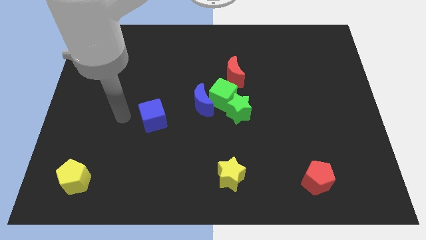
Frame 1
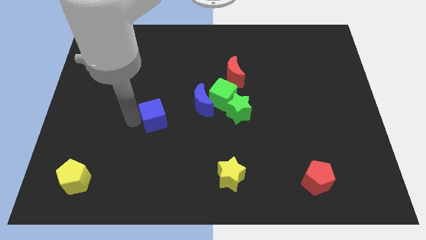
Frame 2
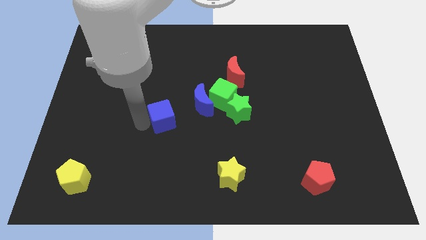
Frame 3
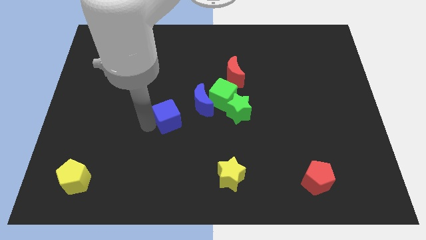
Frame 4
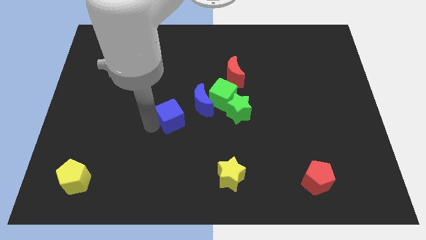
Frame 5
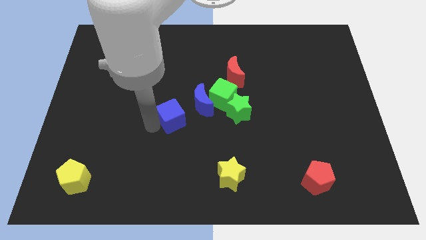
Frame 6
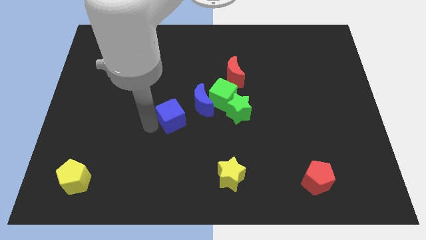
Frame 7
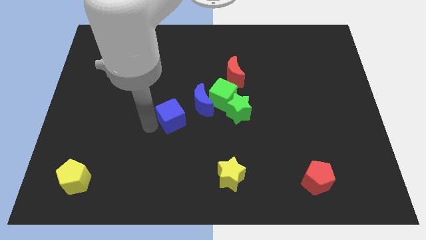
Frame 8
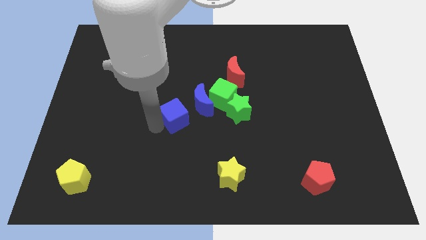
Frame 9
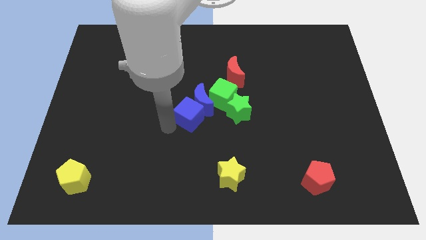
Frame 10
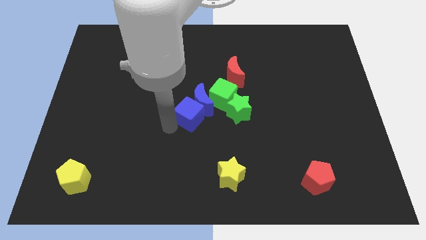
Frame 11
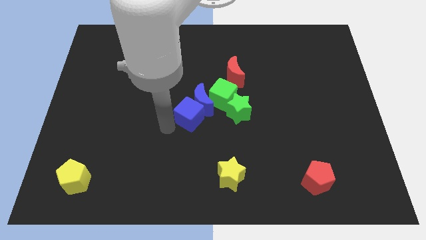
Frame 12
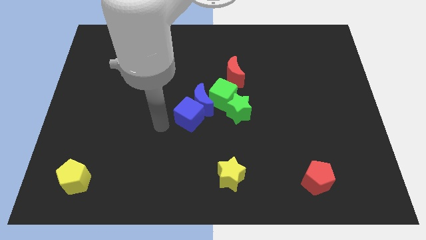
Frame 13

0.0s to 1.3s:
move blue cube into blue moon

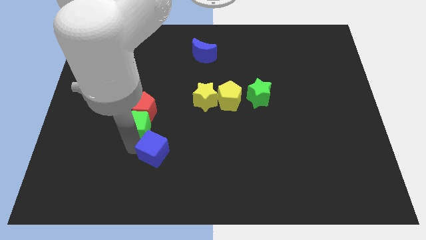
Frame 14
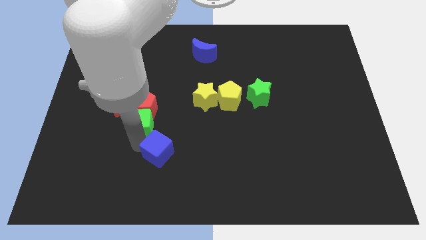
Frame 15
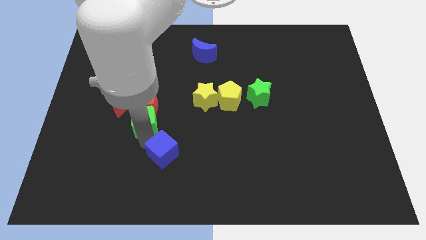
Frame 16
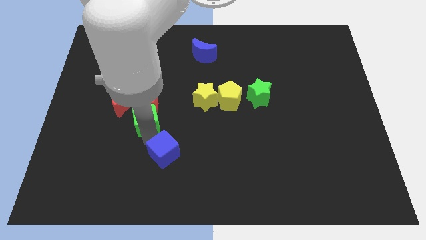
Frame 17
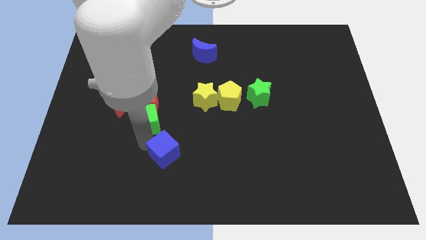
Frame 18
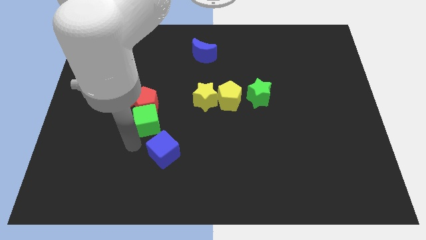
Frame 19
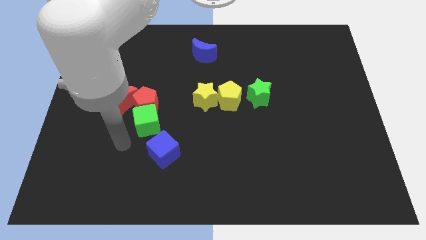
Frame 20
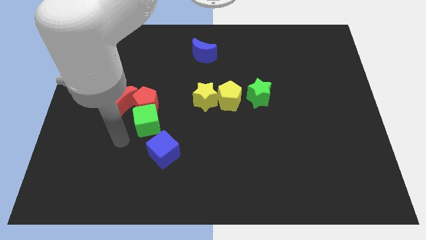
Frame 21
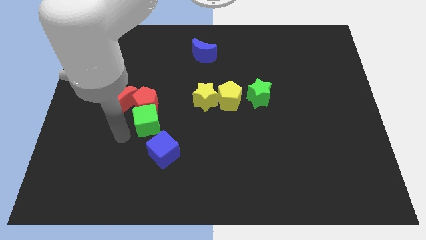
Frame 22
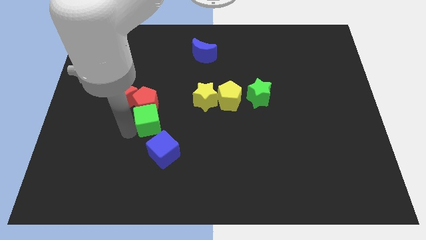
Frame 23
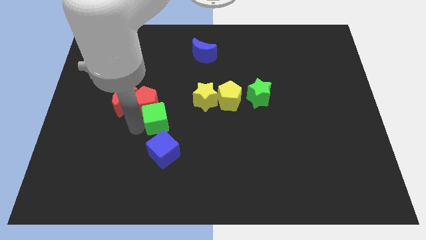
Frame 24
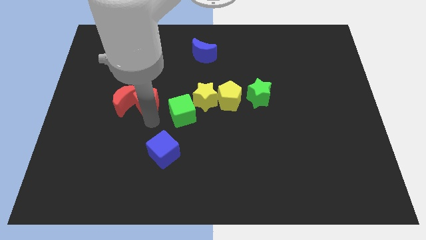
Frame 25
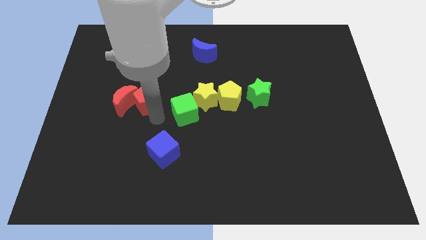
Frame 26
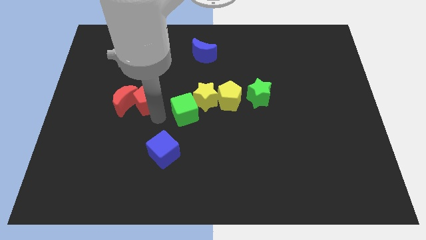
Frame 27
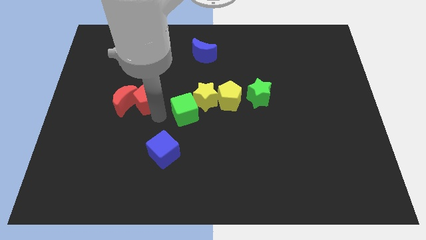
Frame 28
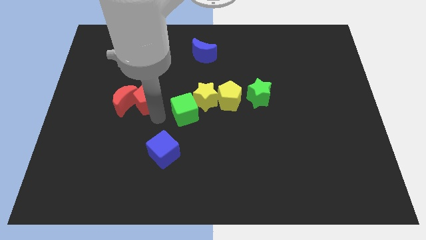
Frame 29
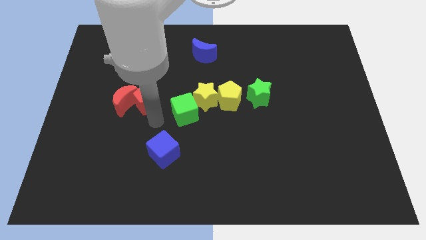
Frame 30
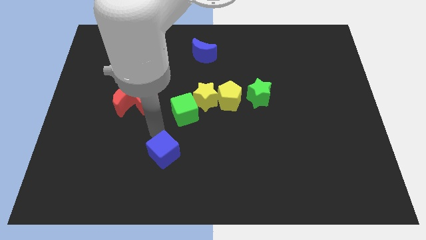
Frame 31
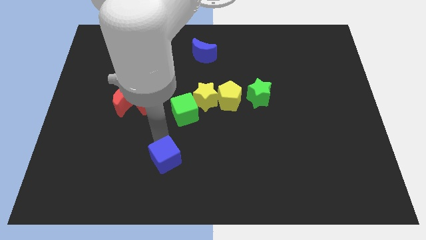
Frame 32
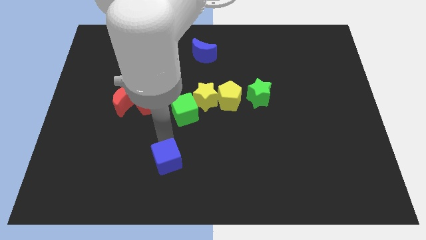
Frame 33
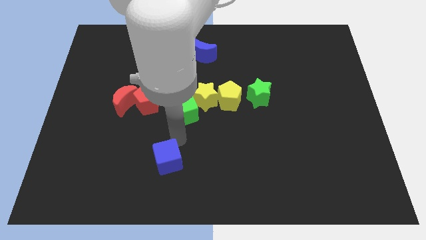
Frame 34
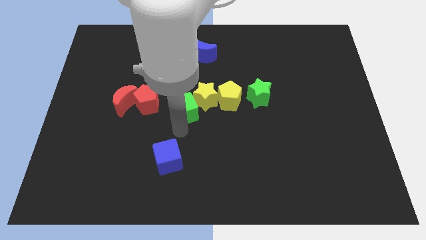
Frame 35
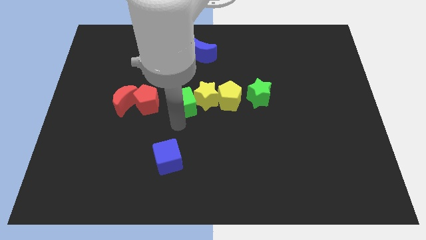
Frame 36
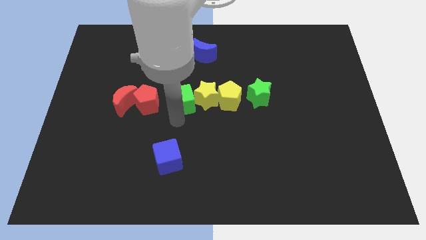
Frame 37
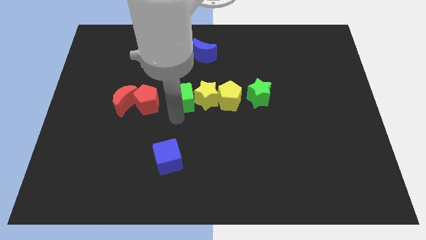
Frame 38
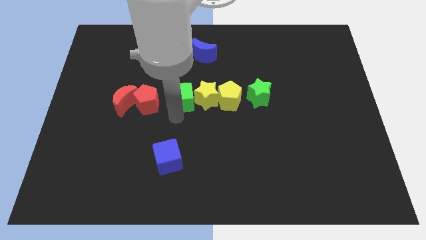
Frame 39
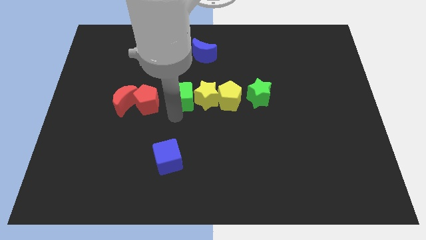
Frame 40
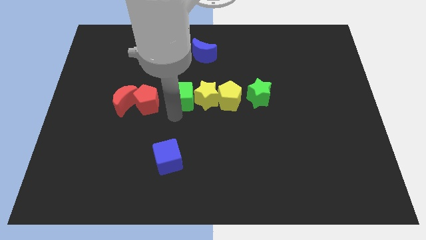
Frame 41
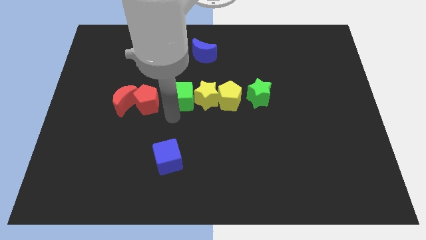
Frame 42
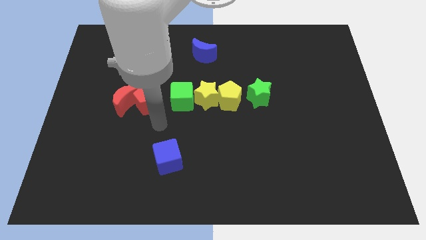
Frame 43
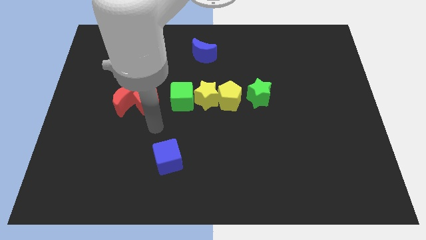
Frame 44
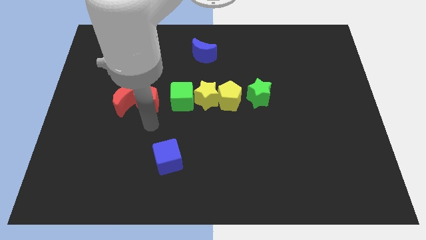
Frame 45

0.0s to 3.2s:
drag the green cube and the blue cube away from each other

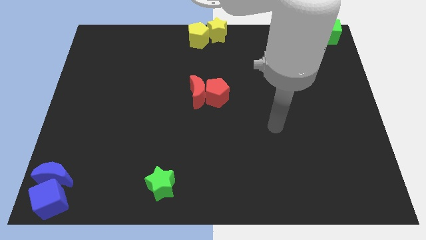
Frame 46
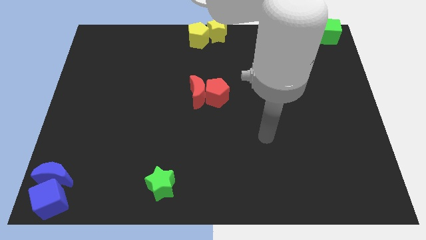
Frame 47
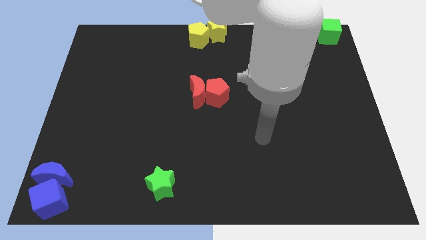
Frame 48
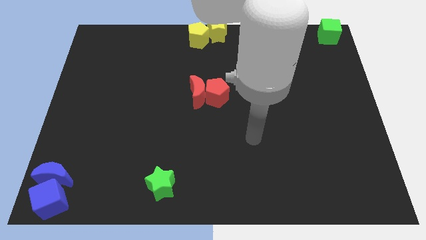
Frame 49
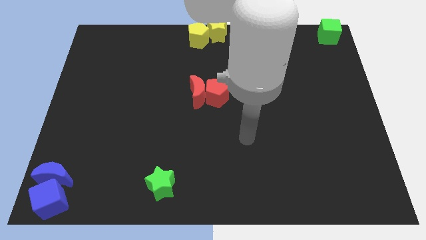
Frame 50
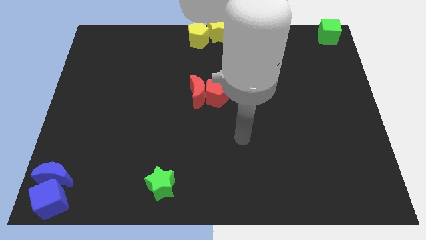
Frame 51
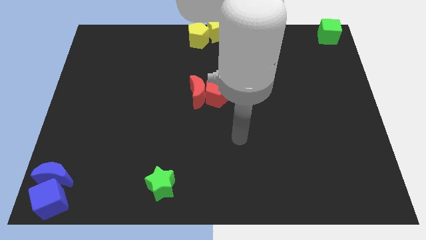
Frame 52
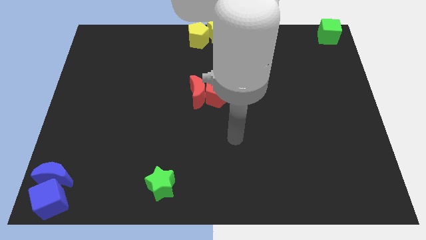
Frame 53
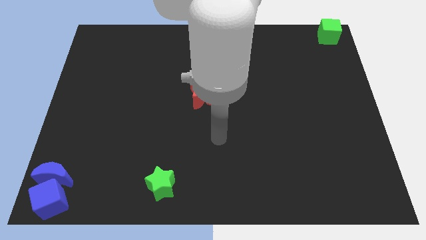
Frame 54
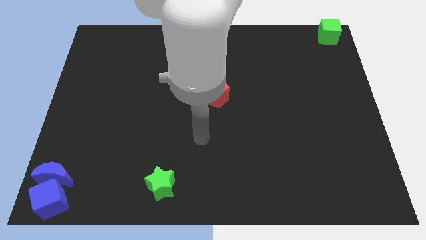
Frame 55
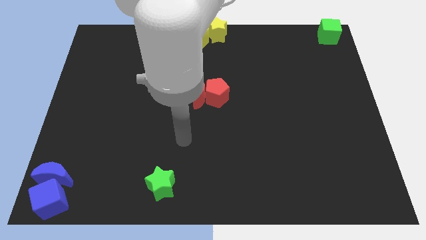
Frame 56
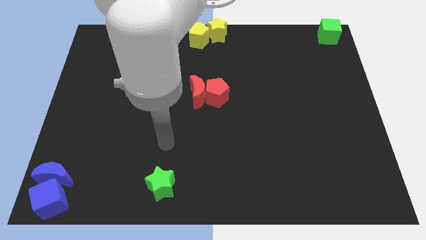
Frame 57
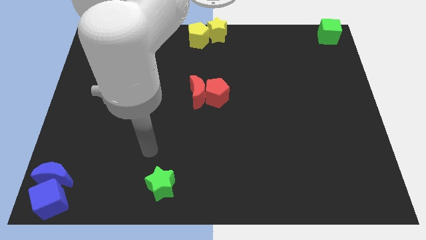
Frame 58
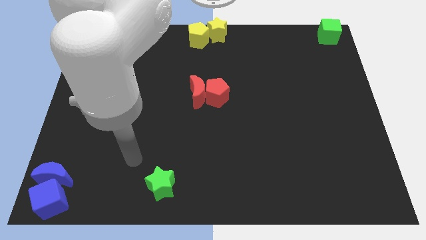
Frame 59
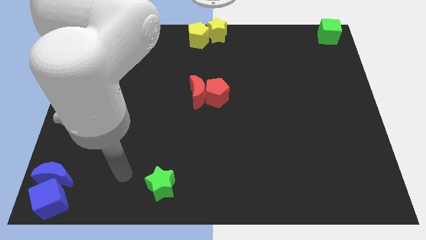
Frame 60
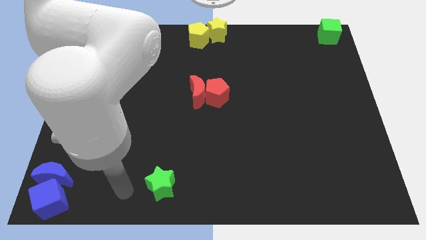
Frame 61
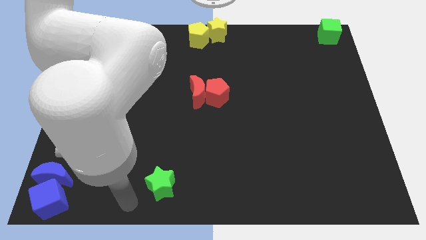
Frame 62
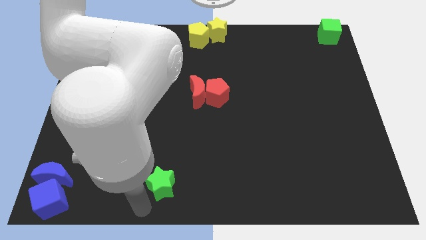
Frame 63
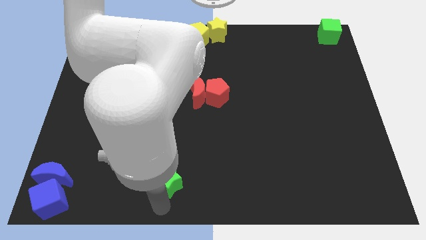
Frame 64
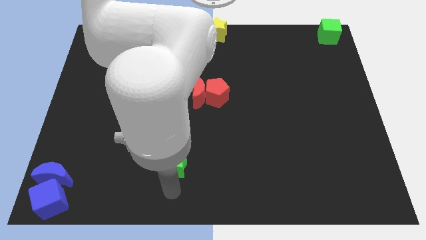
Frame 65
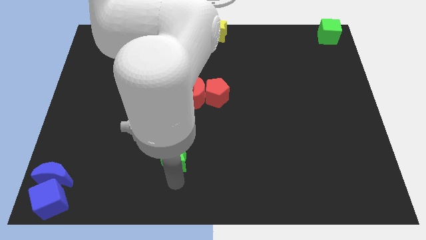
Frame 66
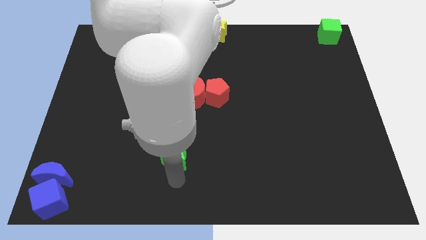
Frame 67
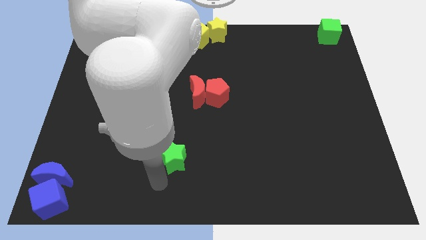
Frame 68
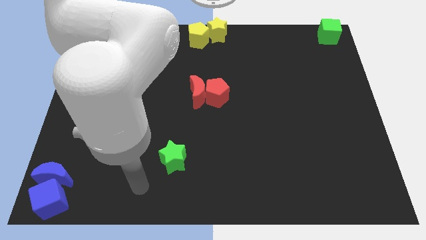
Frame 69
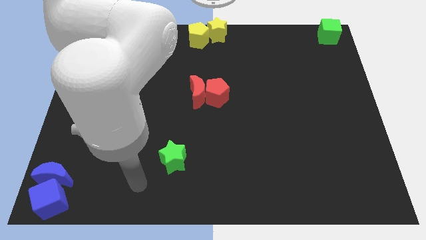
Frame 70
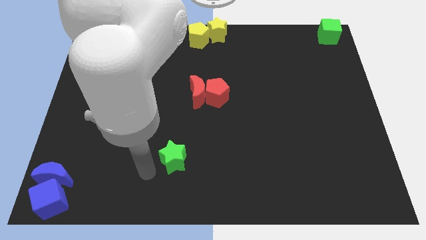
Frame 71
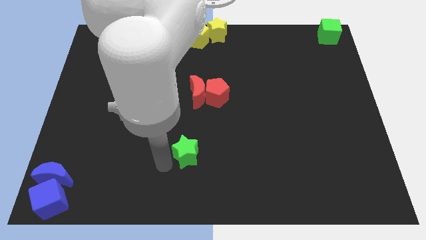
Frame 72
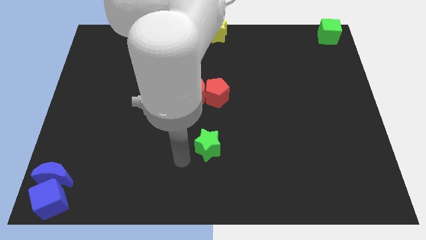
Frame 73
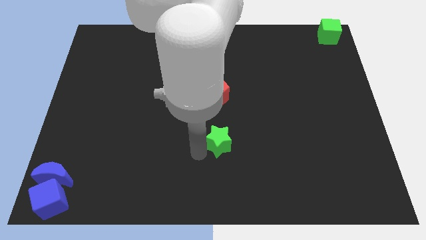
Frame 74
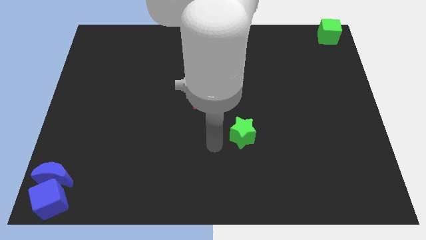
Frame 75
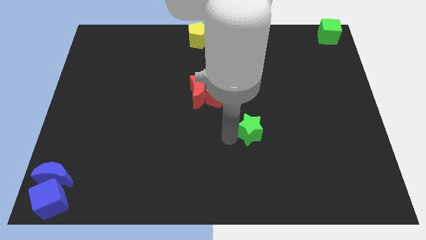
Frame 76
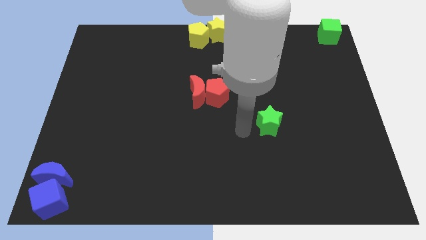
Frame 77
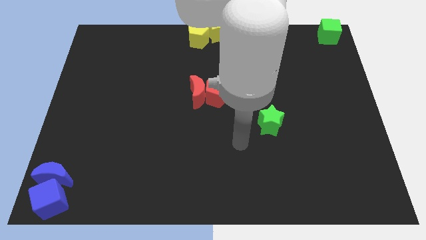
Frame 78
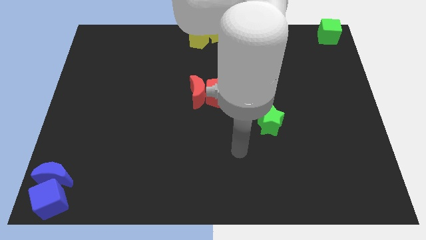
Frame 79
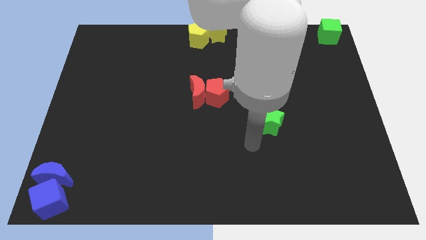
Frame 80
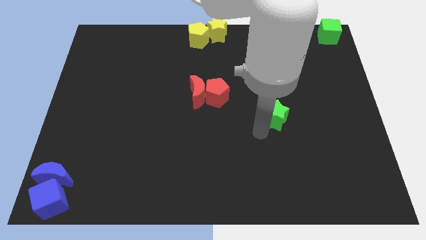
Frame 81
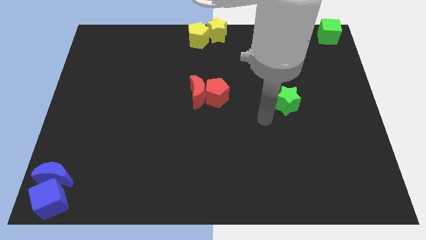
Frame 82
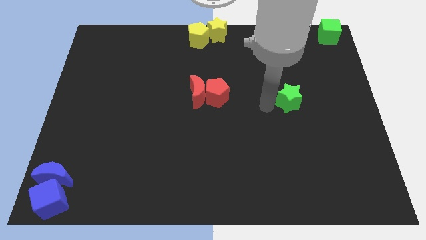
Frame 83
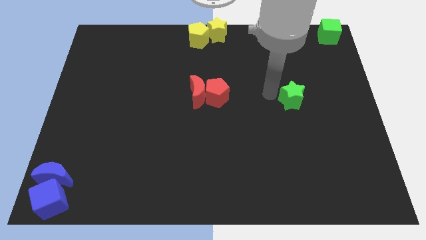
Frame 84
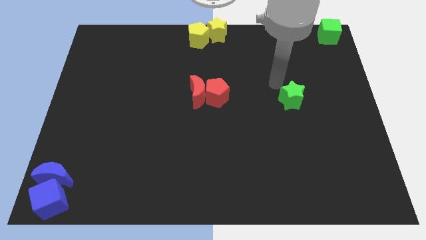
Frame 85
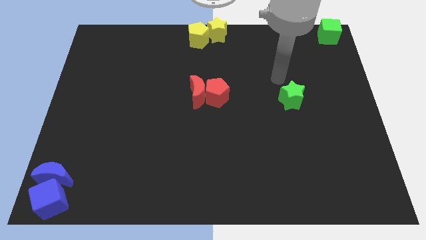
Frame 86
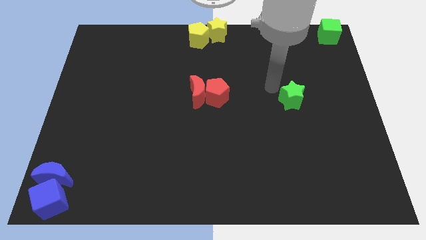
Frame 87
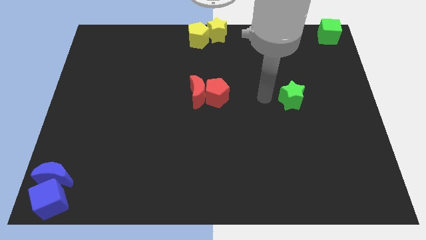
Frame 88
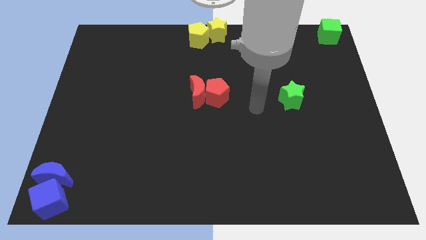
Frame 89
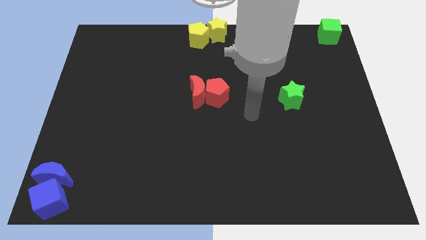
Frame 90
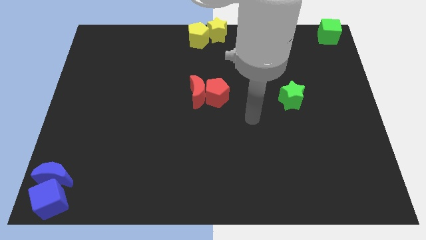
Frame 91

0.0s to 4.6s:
move green star diagonally left below to the green cube
